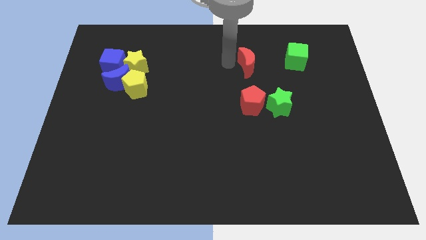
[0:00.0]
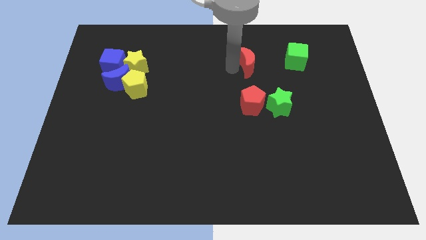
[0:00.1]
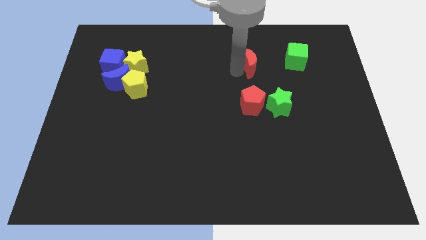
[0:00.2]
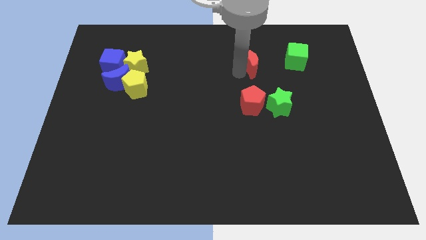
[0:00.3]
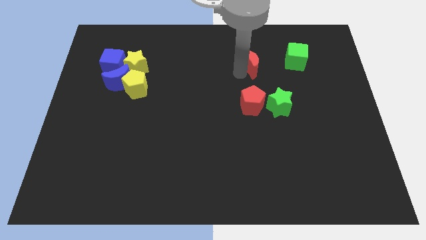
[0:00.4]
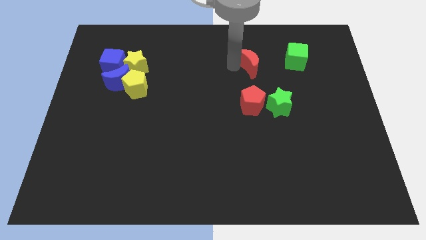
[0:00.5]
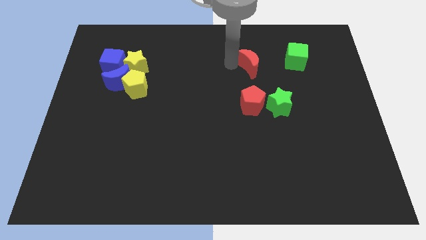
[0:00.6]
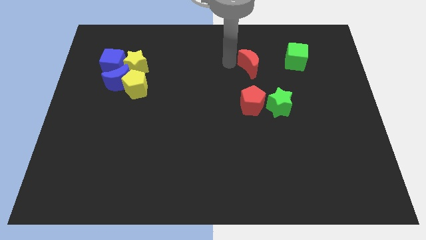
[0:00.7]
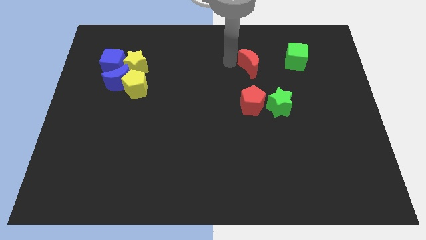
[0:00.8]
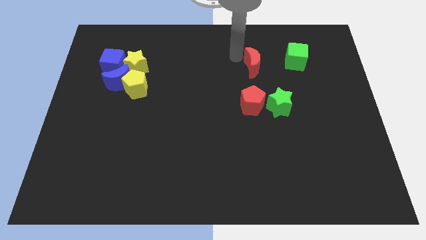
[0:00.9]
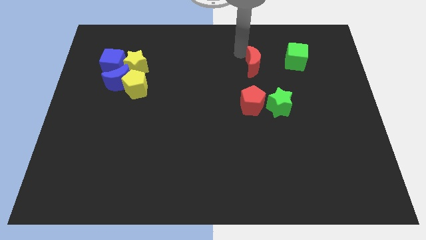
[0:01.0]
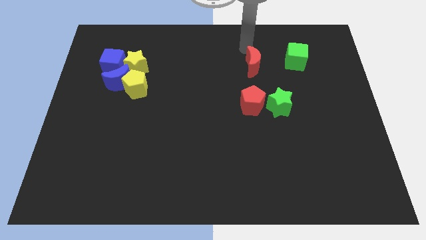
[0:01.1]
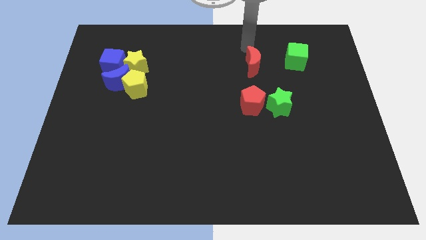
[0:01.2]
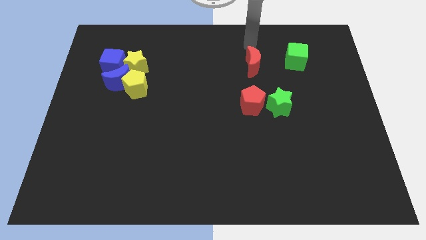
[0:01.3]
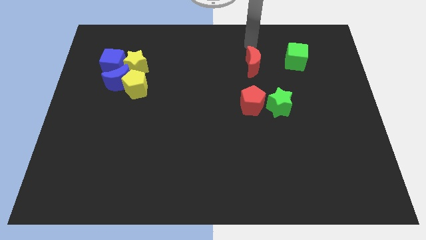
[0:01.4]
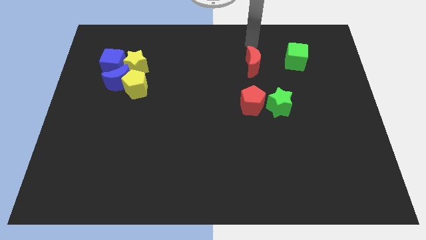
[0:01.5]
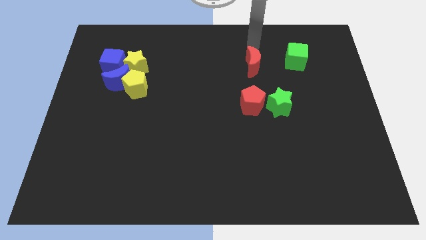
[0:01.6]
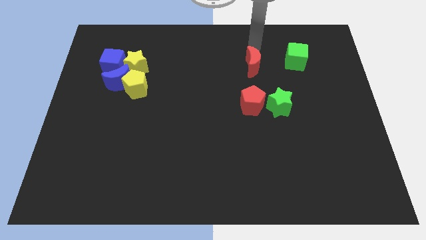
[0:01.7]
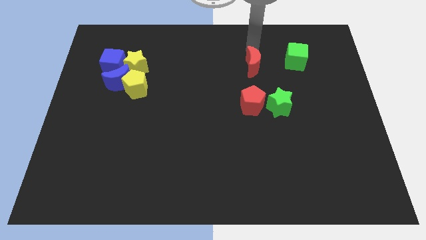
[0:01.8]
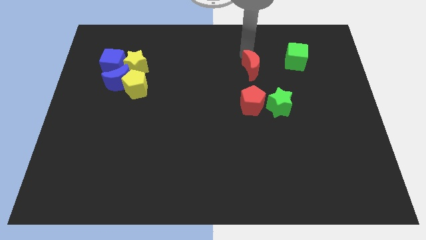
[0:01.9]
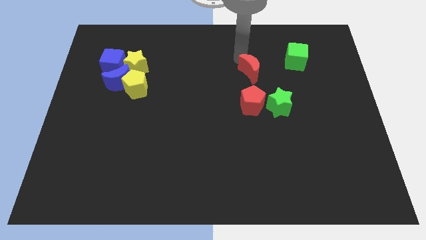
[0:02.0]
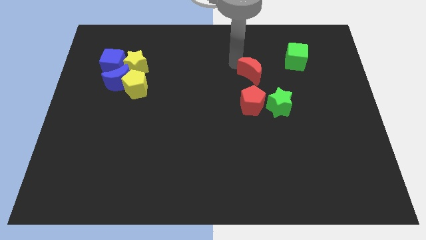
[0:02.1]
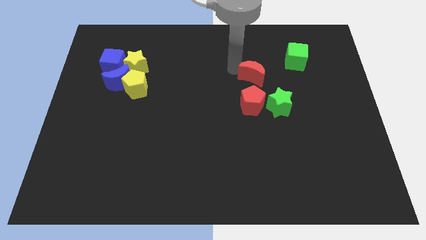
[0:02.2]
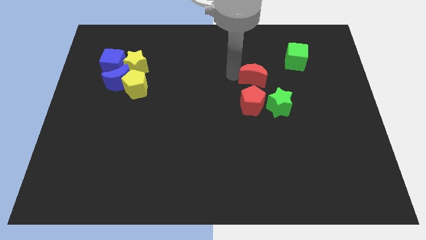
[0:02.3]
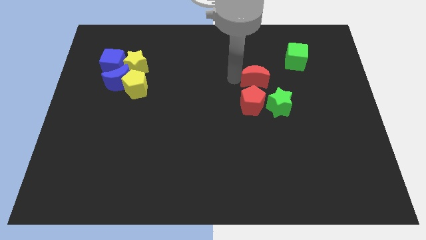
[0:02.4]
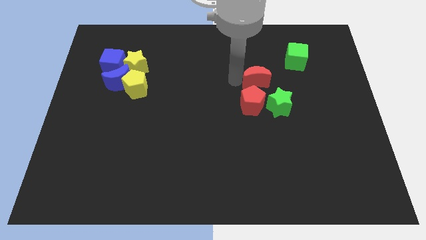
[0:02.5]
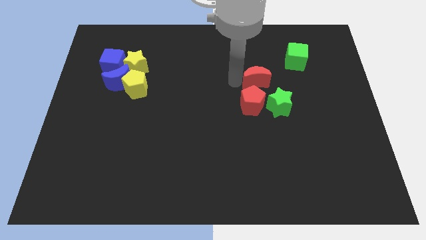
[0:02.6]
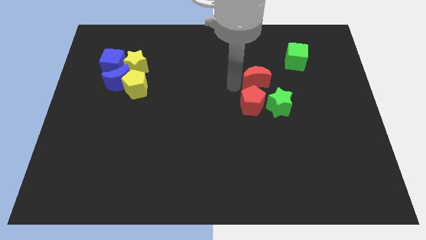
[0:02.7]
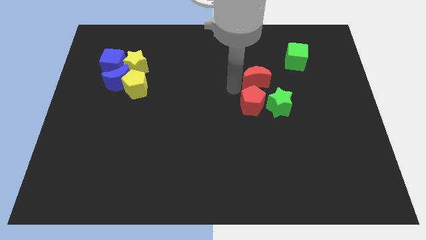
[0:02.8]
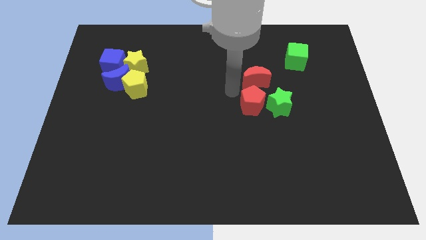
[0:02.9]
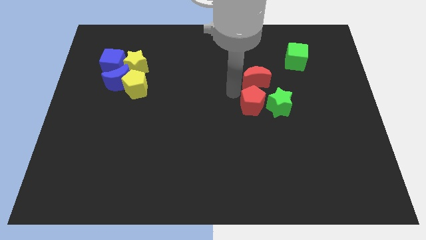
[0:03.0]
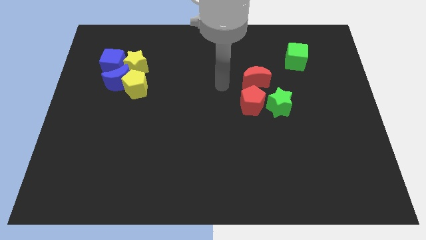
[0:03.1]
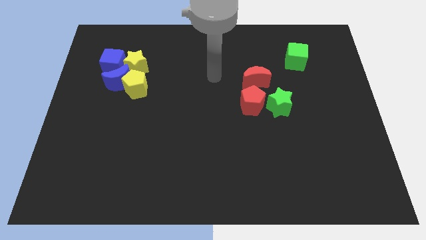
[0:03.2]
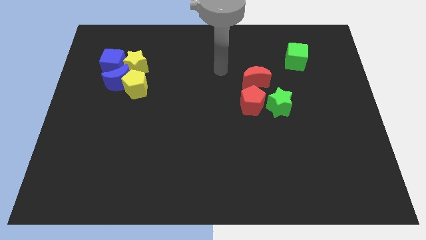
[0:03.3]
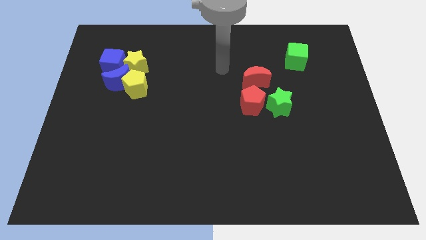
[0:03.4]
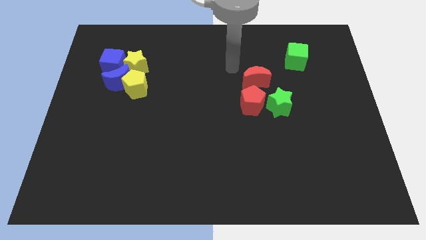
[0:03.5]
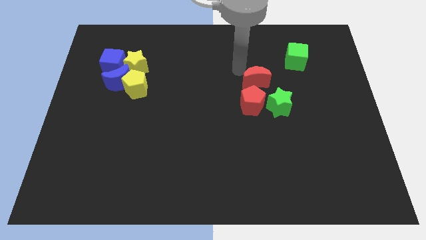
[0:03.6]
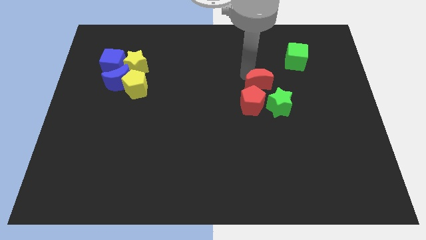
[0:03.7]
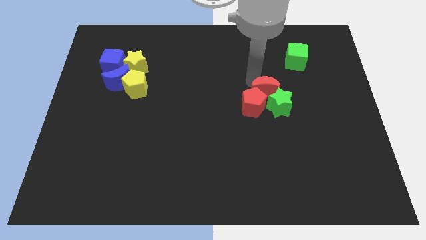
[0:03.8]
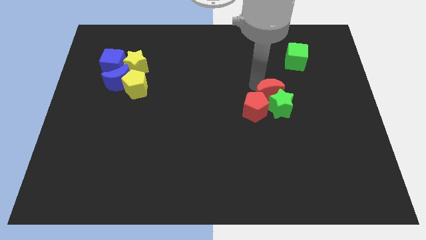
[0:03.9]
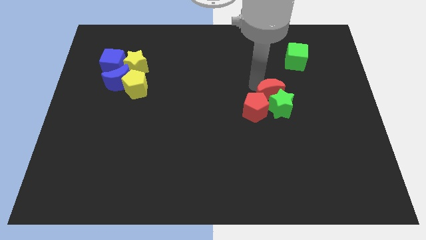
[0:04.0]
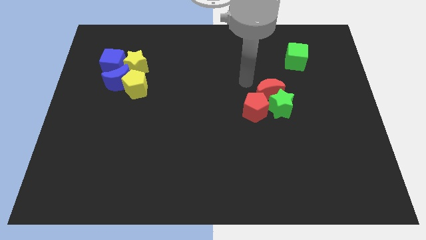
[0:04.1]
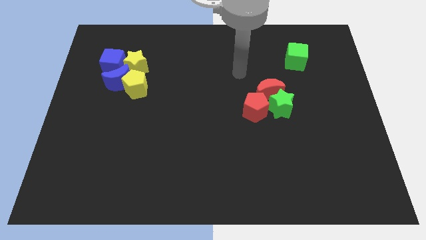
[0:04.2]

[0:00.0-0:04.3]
place the red crescent above the green star

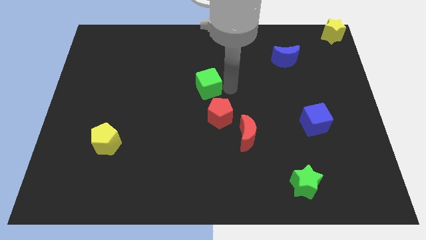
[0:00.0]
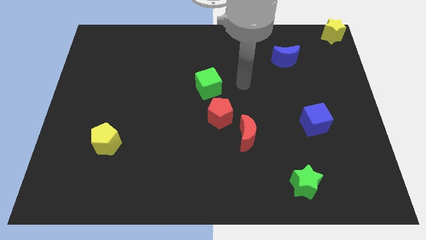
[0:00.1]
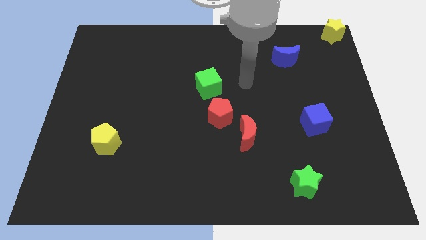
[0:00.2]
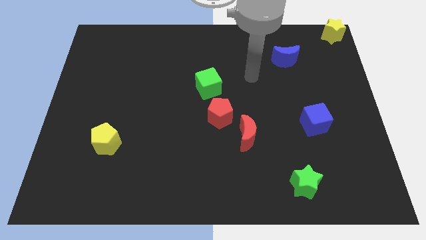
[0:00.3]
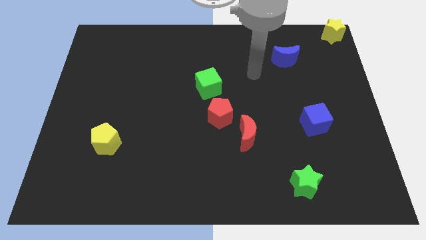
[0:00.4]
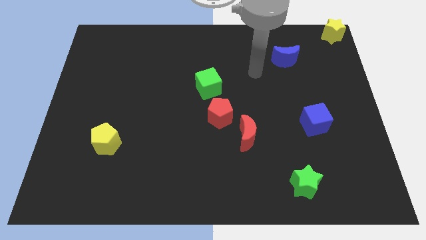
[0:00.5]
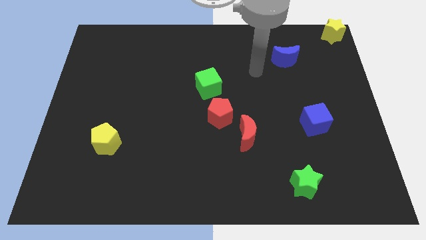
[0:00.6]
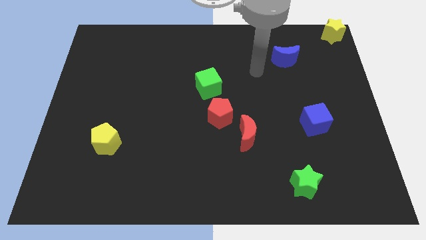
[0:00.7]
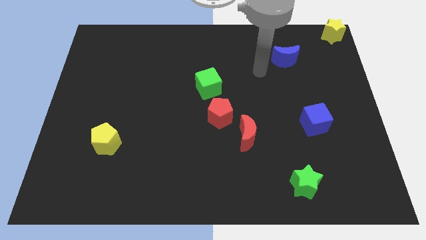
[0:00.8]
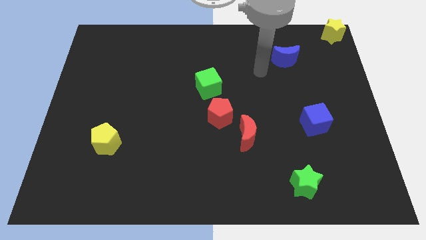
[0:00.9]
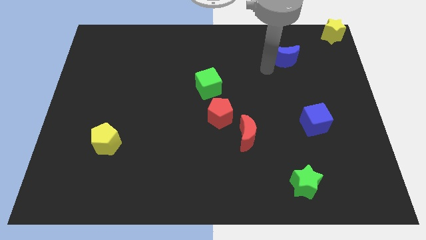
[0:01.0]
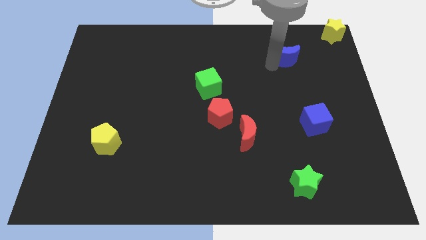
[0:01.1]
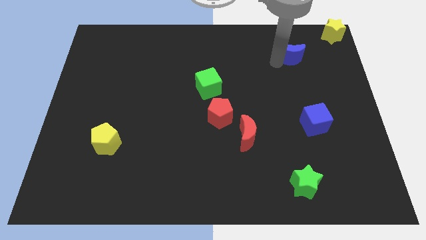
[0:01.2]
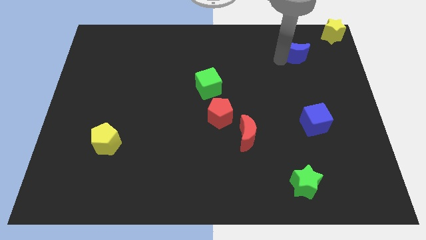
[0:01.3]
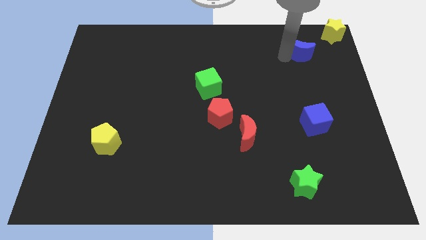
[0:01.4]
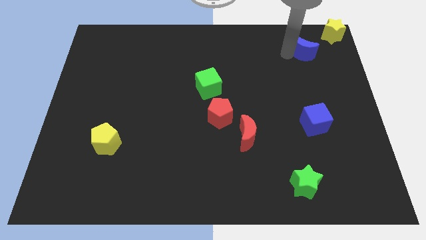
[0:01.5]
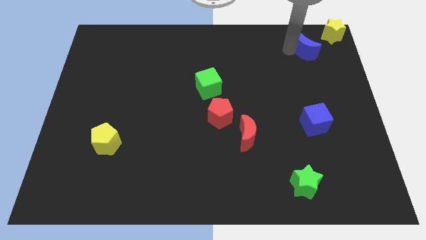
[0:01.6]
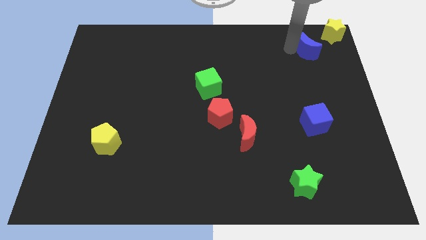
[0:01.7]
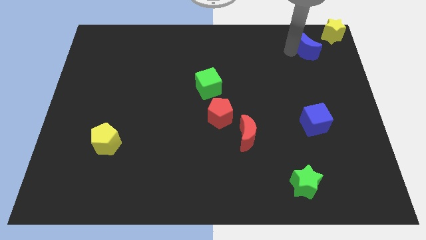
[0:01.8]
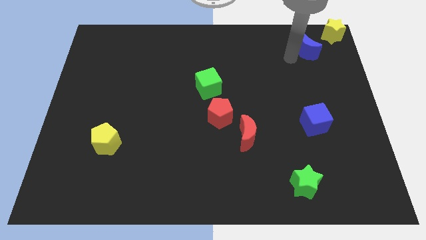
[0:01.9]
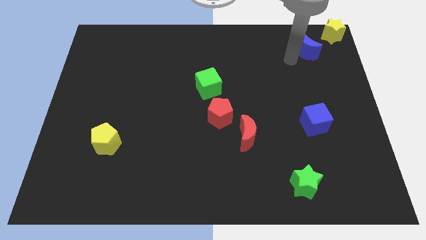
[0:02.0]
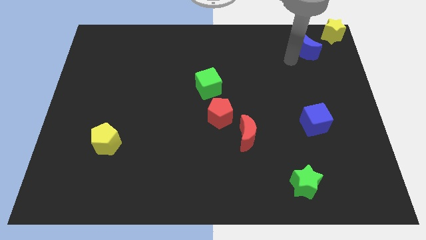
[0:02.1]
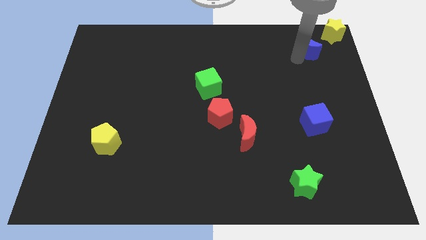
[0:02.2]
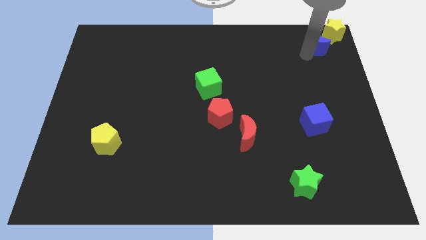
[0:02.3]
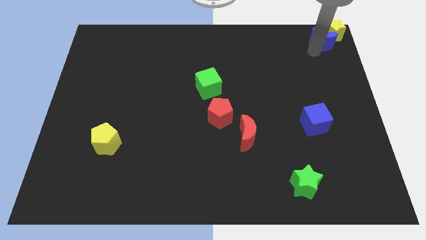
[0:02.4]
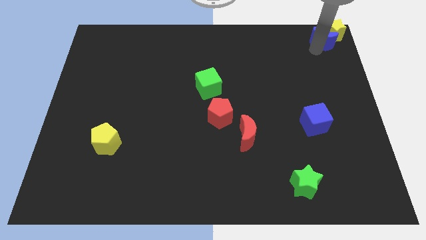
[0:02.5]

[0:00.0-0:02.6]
move the blue moon below the yellow star at the top right of the board

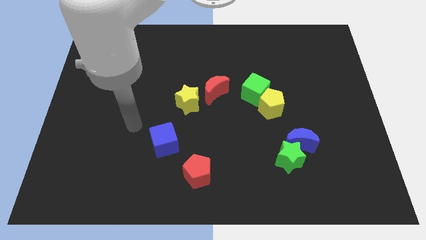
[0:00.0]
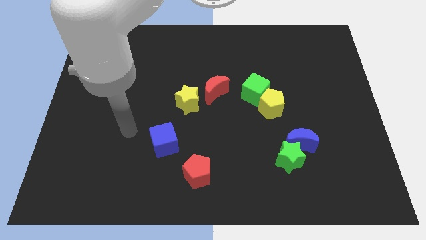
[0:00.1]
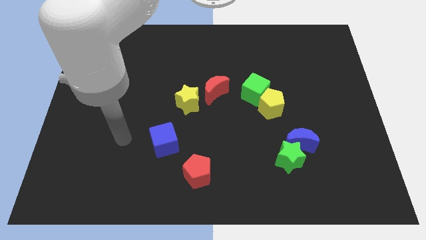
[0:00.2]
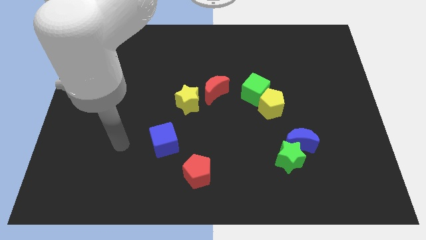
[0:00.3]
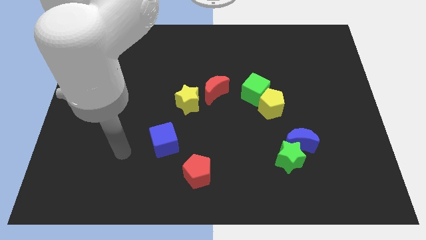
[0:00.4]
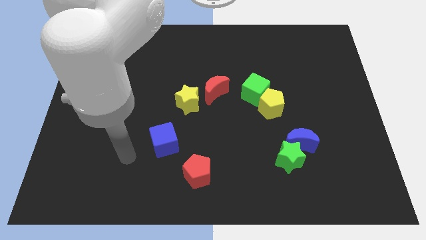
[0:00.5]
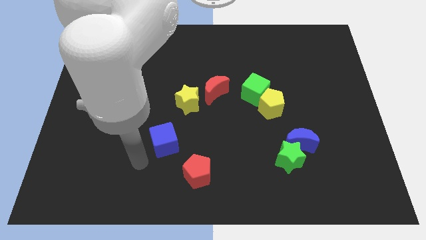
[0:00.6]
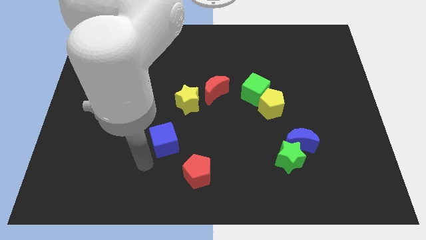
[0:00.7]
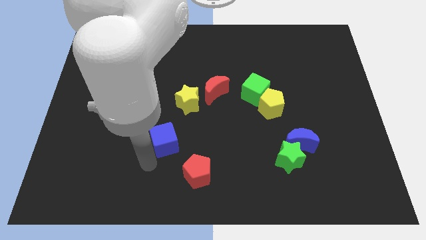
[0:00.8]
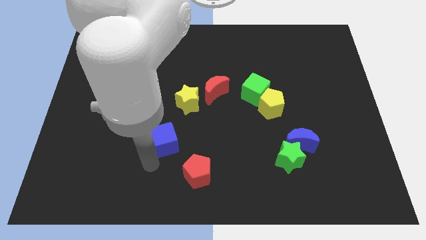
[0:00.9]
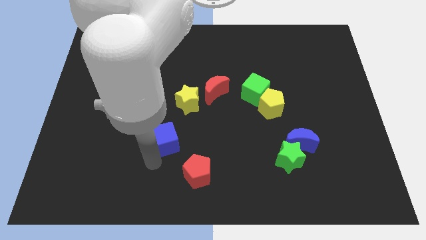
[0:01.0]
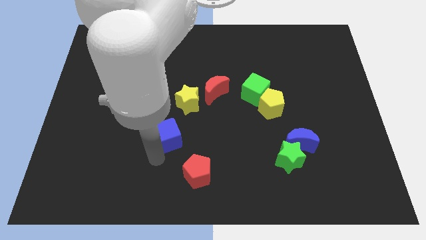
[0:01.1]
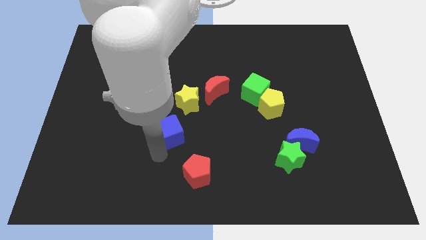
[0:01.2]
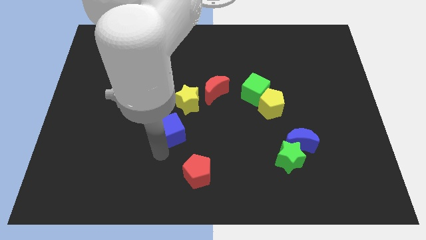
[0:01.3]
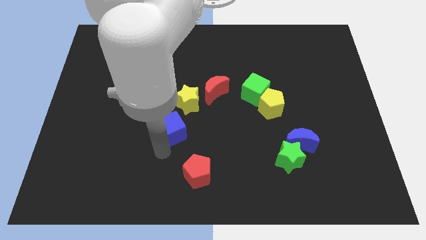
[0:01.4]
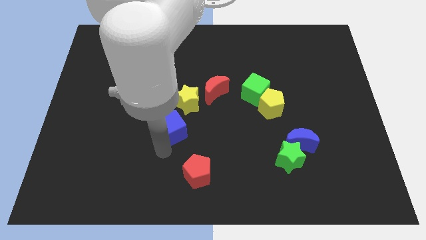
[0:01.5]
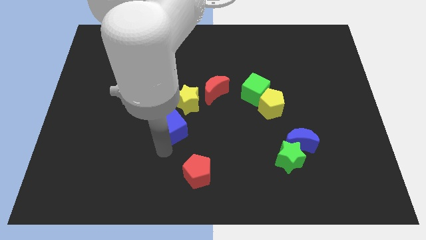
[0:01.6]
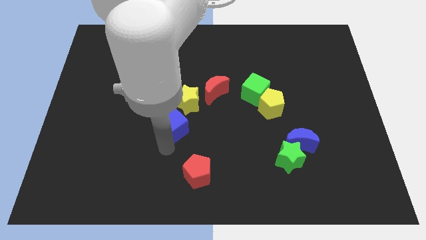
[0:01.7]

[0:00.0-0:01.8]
move the blue cube into the yellow star

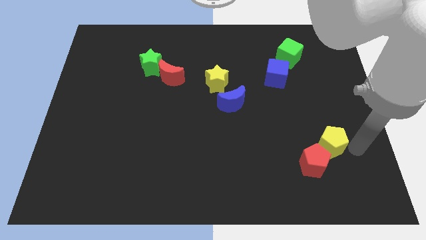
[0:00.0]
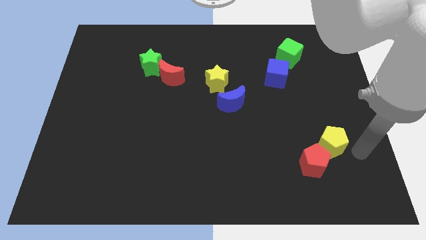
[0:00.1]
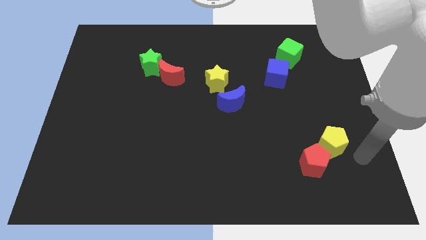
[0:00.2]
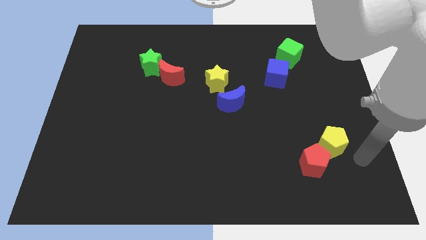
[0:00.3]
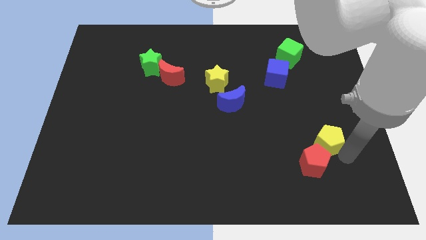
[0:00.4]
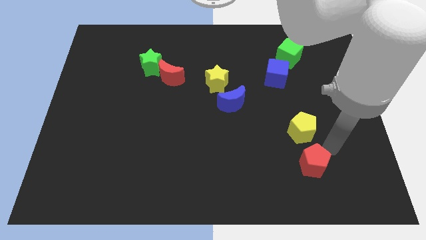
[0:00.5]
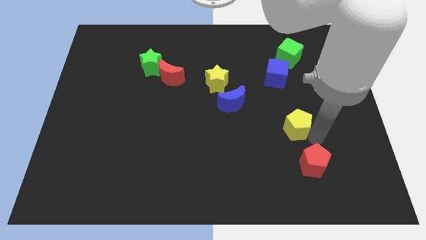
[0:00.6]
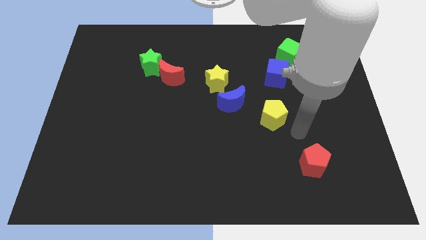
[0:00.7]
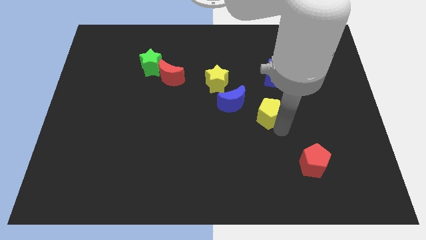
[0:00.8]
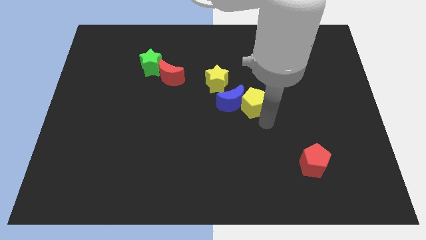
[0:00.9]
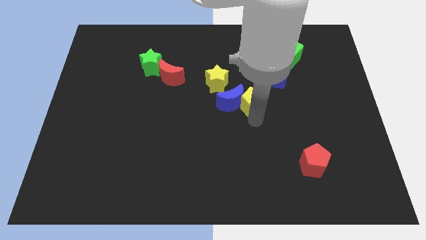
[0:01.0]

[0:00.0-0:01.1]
push the yellow pentagon into the blue moon
